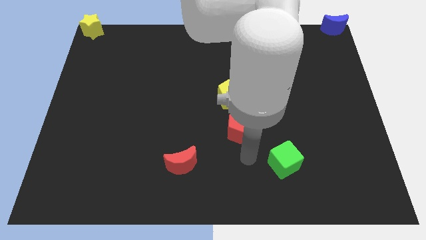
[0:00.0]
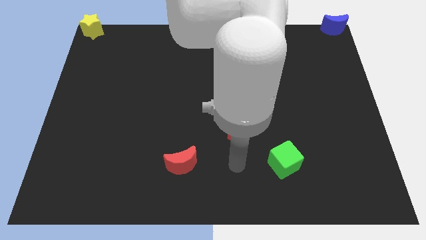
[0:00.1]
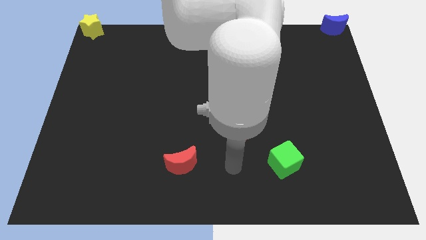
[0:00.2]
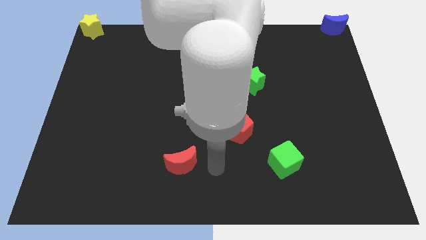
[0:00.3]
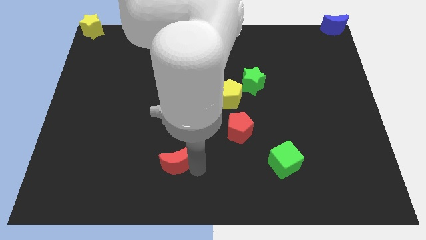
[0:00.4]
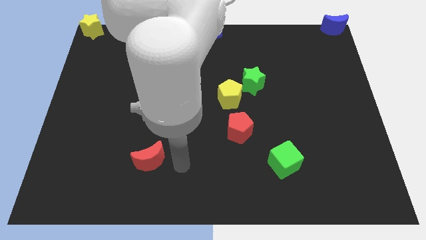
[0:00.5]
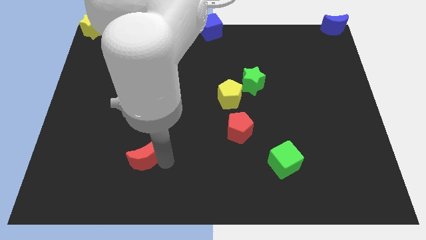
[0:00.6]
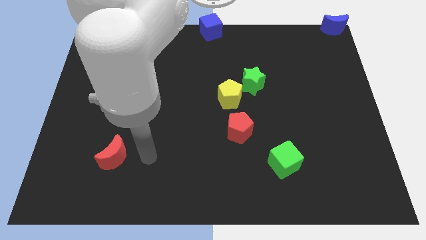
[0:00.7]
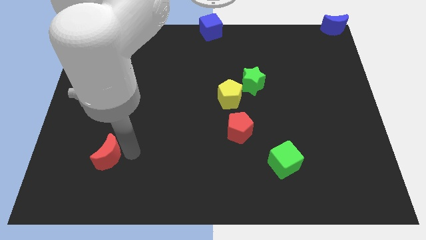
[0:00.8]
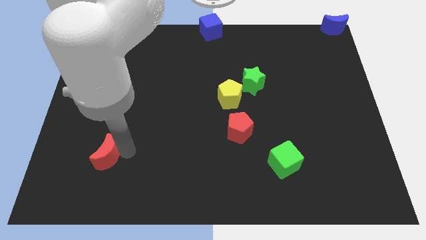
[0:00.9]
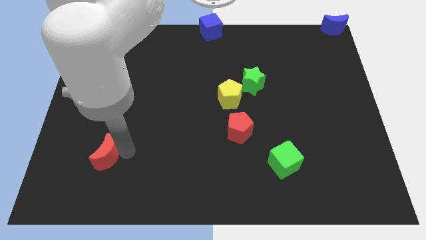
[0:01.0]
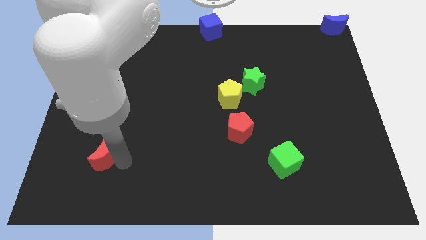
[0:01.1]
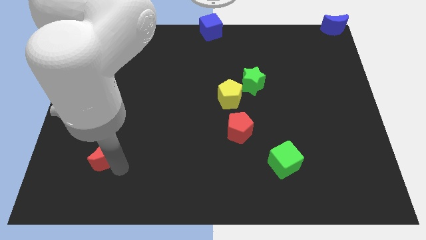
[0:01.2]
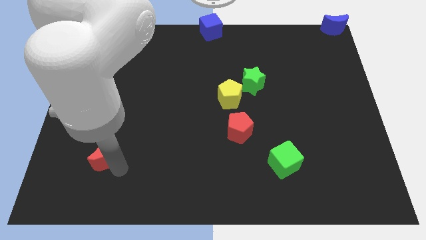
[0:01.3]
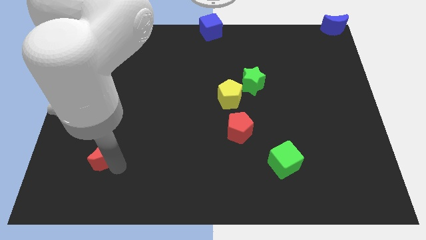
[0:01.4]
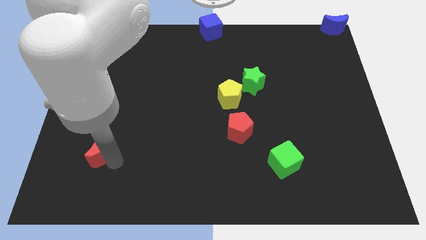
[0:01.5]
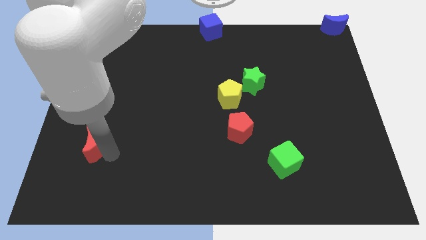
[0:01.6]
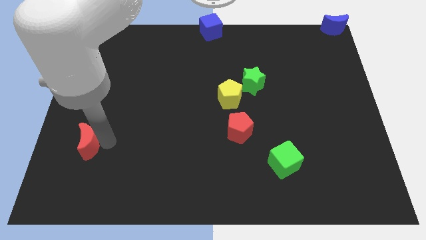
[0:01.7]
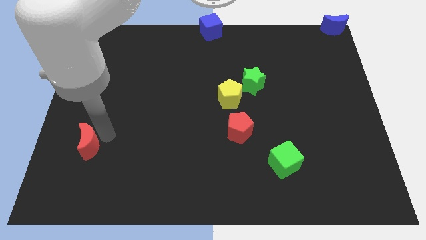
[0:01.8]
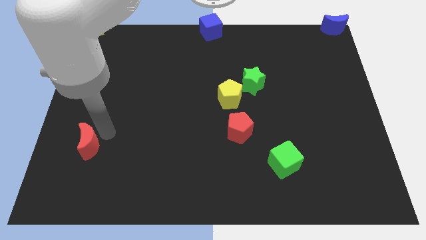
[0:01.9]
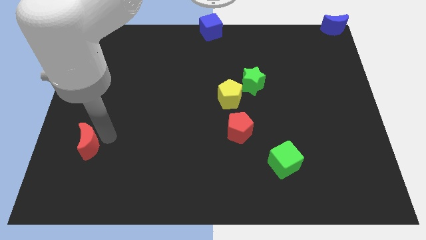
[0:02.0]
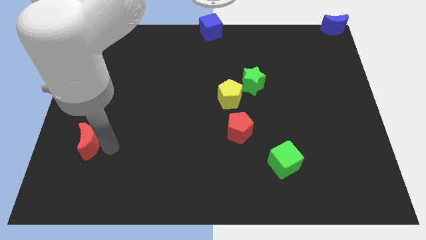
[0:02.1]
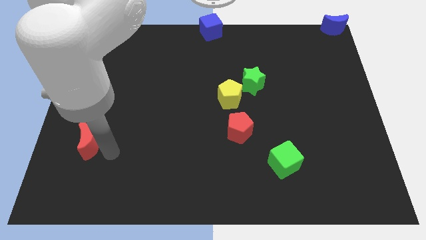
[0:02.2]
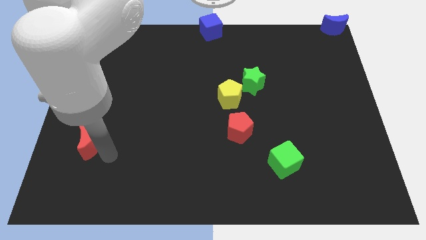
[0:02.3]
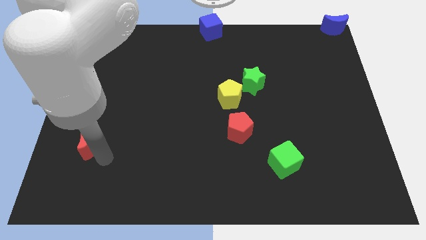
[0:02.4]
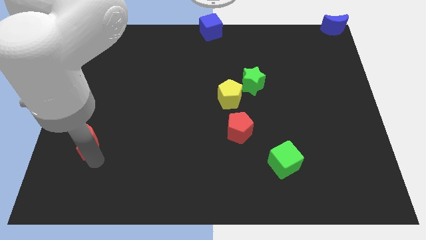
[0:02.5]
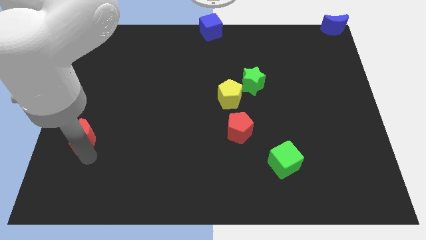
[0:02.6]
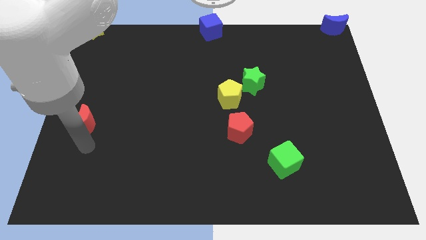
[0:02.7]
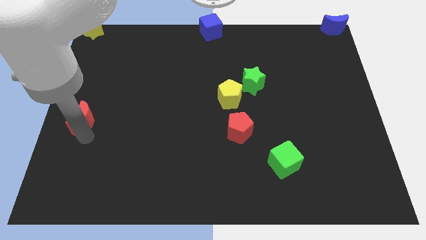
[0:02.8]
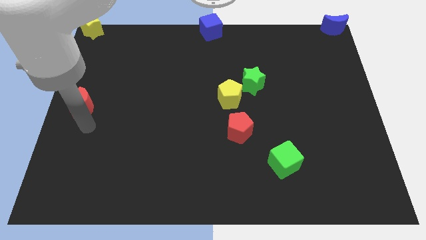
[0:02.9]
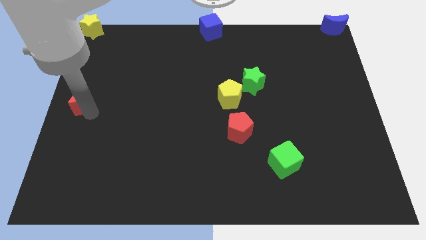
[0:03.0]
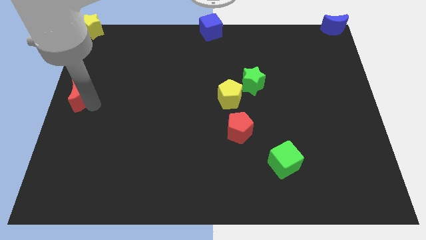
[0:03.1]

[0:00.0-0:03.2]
put the red crescent to the center left side of the board

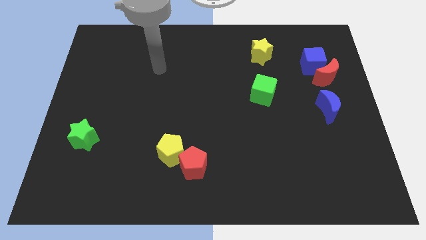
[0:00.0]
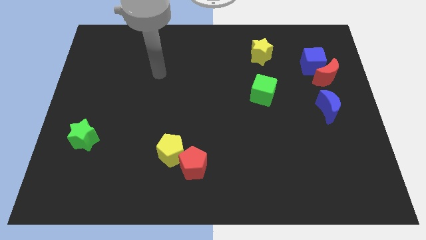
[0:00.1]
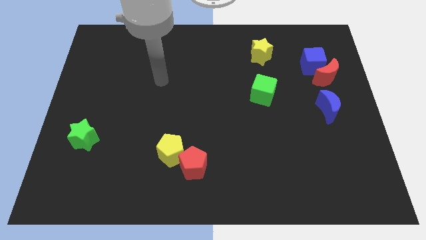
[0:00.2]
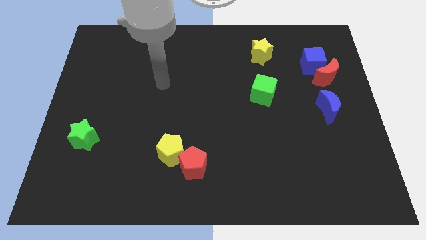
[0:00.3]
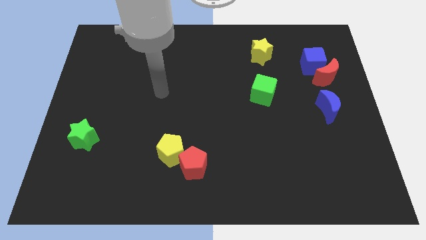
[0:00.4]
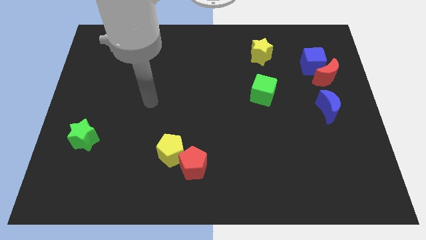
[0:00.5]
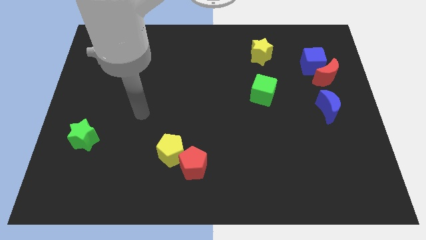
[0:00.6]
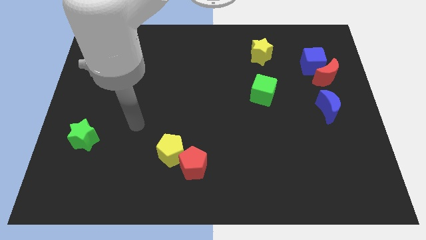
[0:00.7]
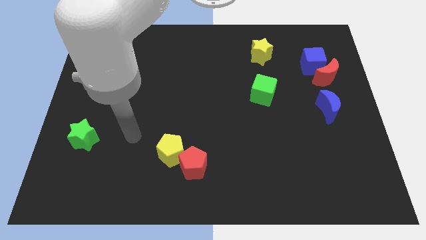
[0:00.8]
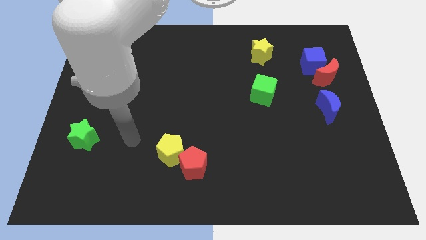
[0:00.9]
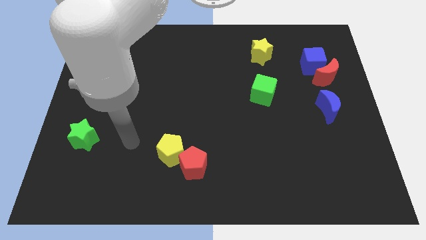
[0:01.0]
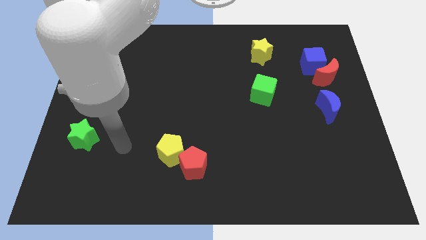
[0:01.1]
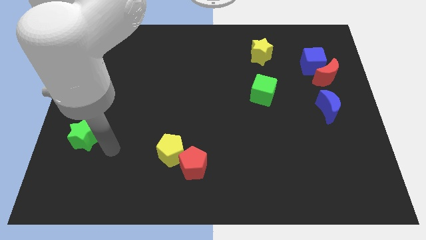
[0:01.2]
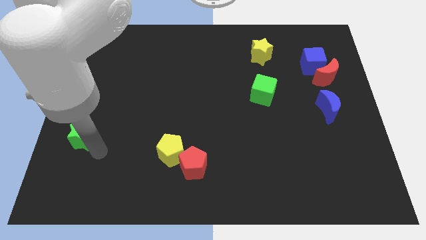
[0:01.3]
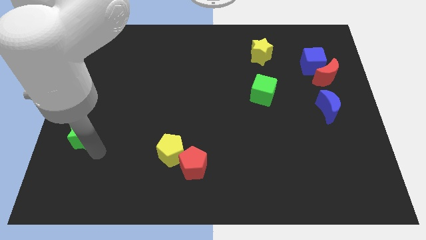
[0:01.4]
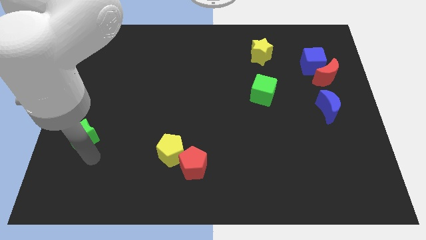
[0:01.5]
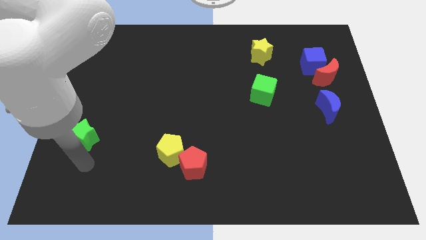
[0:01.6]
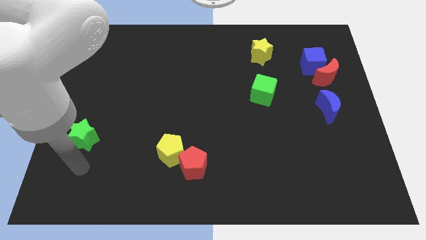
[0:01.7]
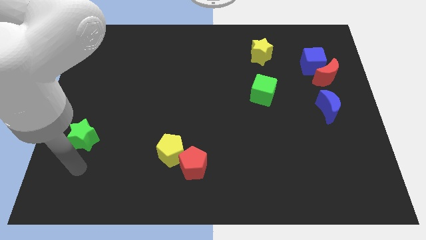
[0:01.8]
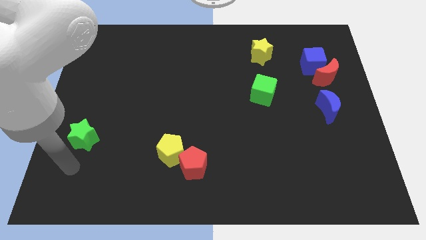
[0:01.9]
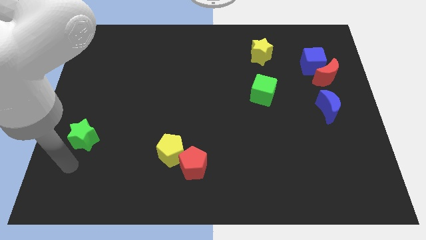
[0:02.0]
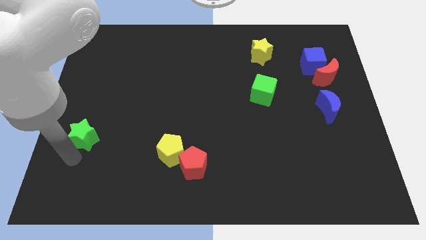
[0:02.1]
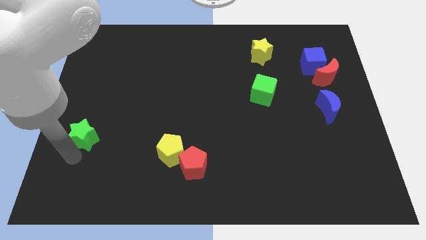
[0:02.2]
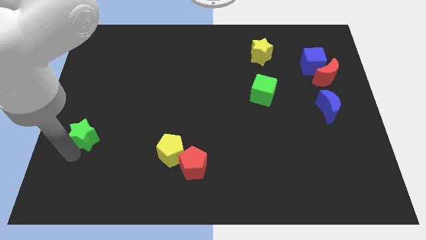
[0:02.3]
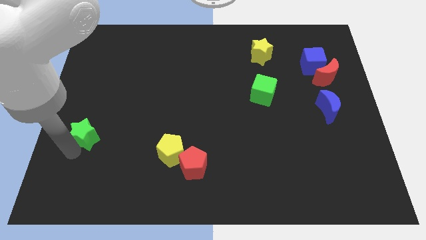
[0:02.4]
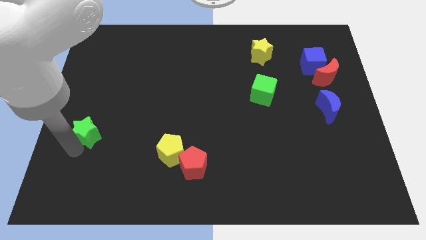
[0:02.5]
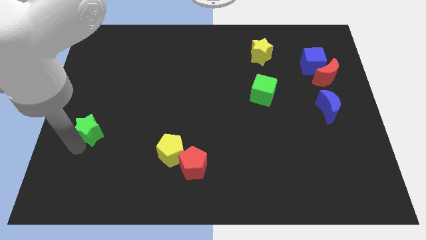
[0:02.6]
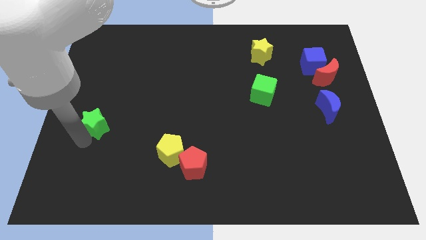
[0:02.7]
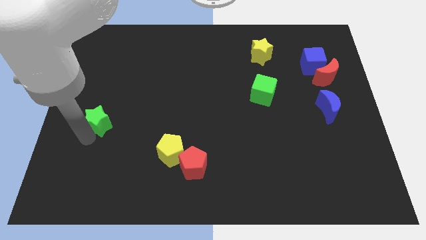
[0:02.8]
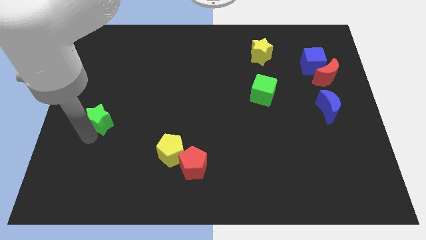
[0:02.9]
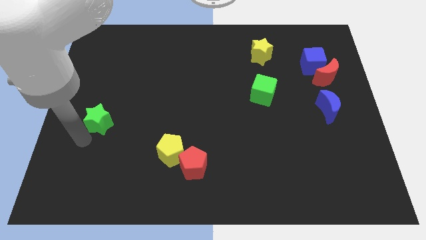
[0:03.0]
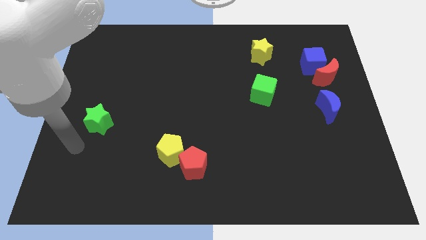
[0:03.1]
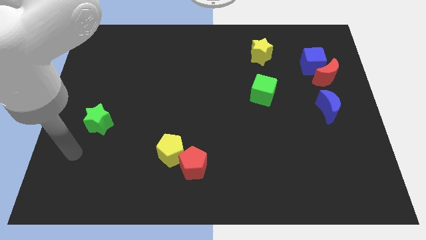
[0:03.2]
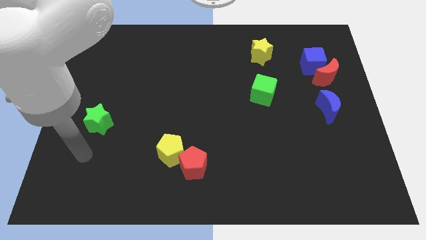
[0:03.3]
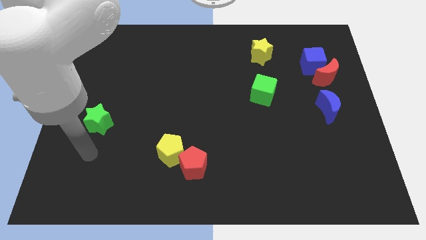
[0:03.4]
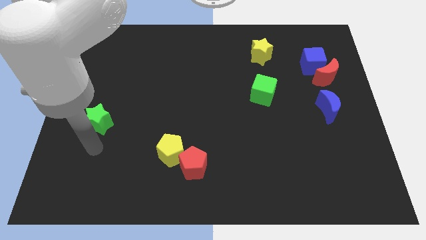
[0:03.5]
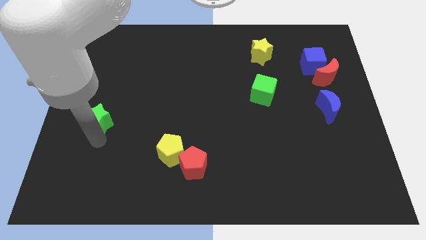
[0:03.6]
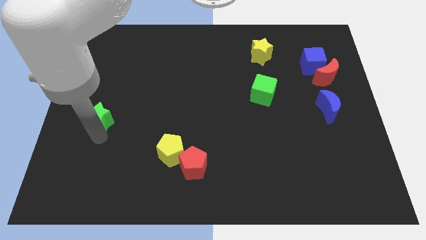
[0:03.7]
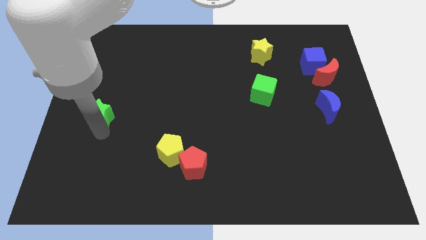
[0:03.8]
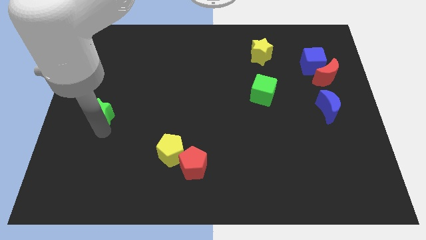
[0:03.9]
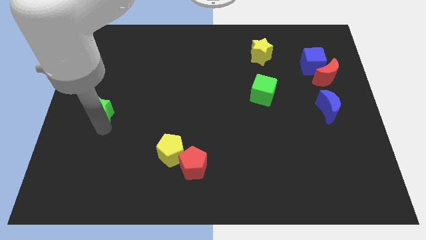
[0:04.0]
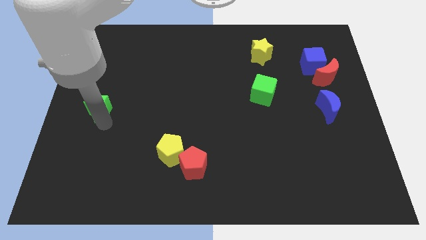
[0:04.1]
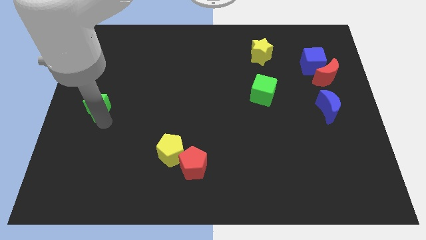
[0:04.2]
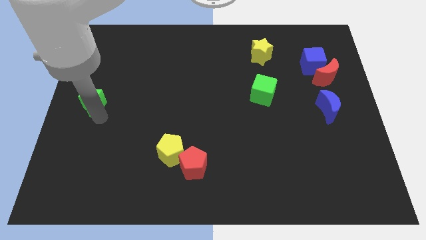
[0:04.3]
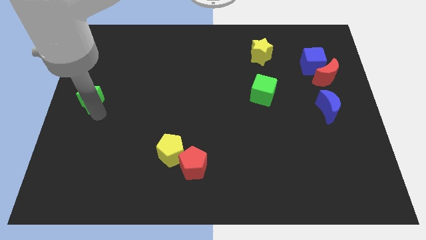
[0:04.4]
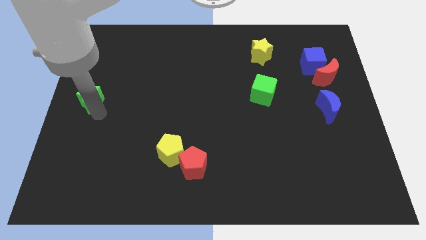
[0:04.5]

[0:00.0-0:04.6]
place the green star to the left center

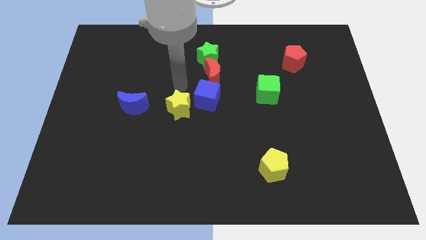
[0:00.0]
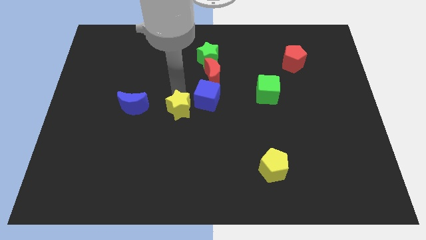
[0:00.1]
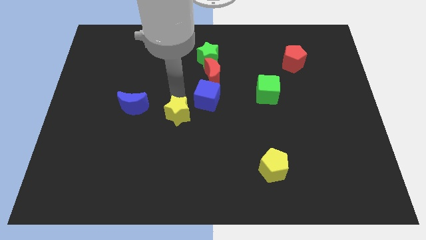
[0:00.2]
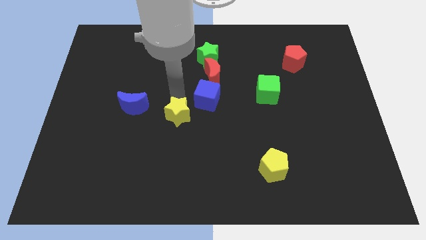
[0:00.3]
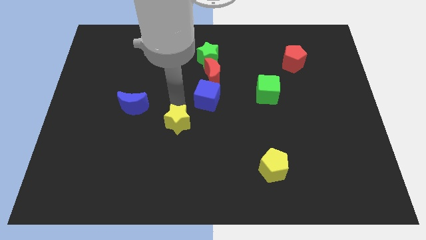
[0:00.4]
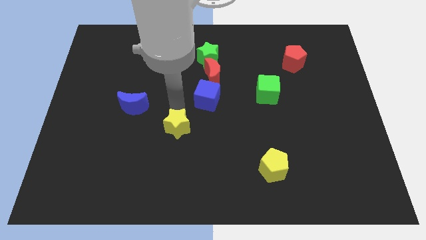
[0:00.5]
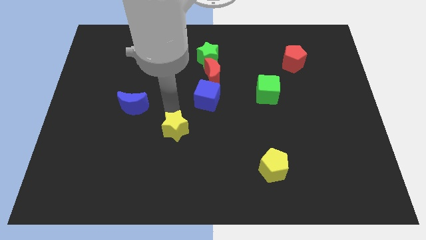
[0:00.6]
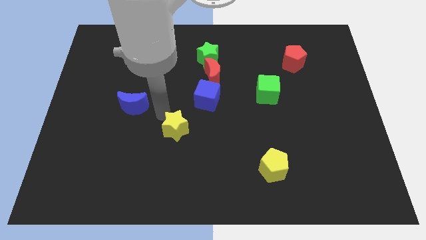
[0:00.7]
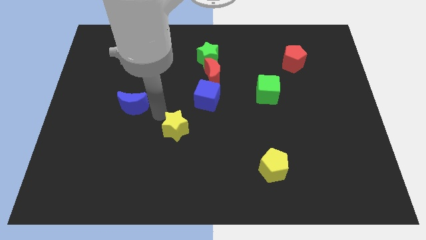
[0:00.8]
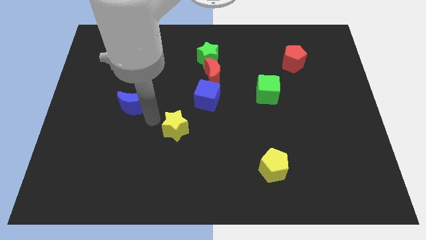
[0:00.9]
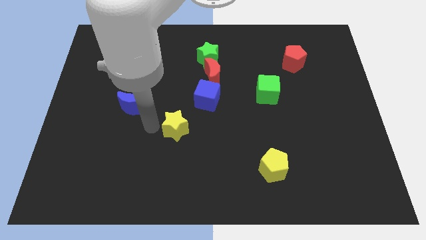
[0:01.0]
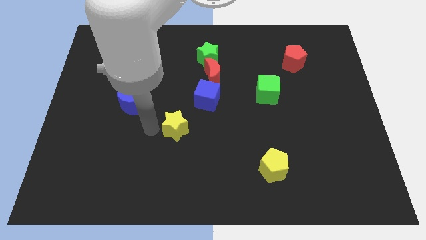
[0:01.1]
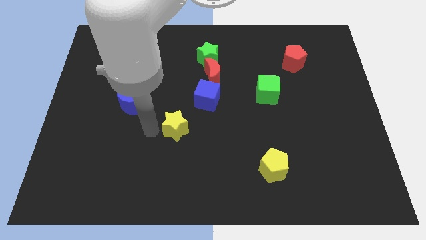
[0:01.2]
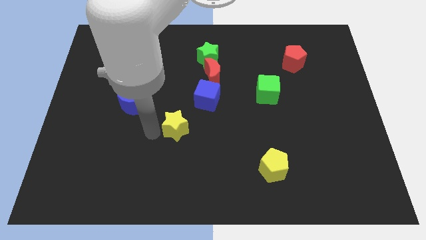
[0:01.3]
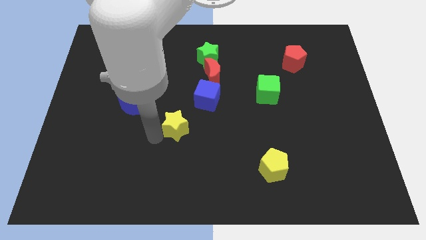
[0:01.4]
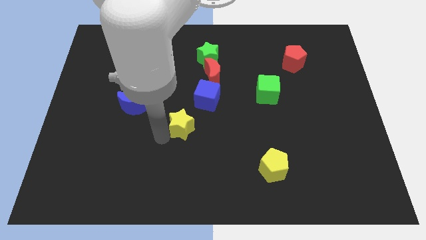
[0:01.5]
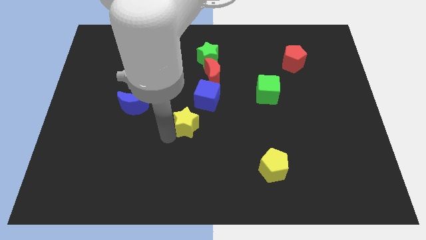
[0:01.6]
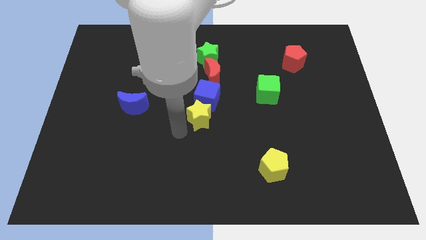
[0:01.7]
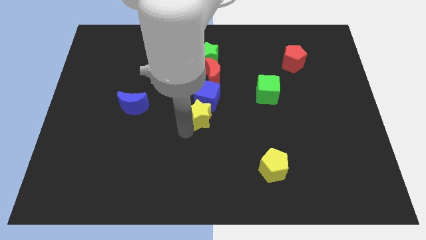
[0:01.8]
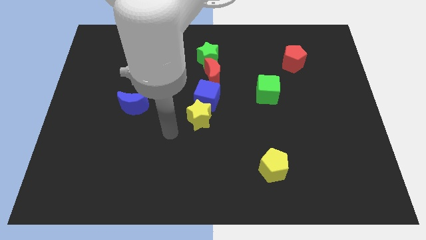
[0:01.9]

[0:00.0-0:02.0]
place the yellow star below the blue cube
